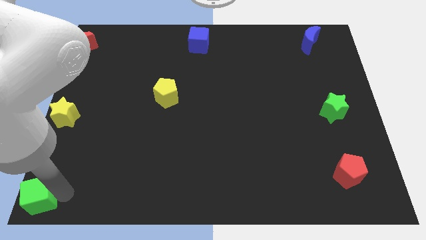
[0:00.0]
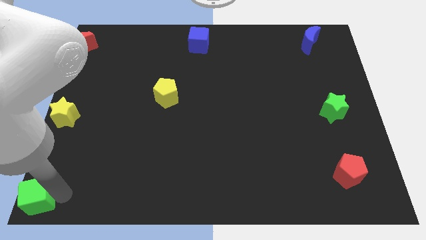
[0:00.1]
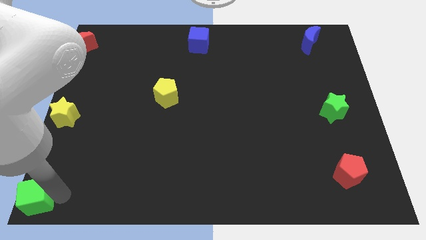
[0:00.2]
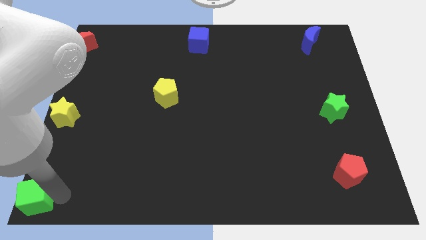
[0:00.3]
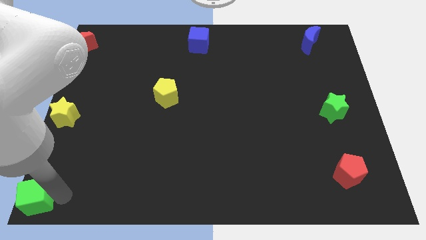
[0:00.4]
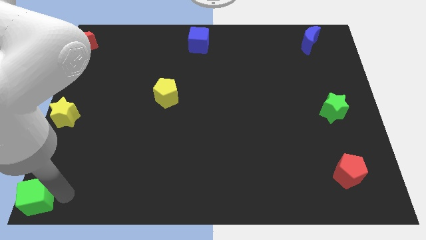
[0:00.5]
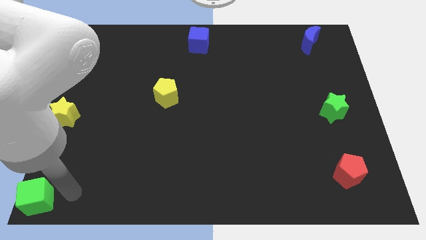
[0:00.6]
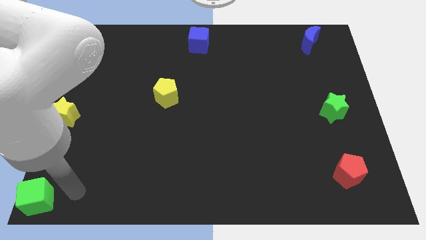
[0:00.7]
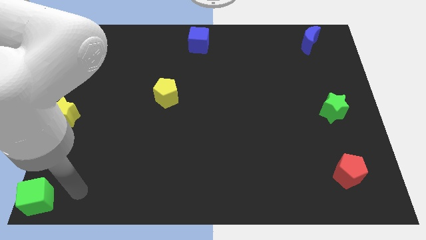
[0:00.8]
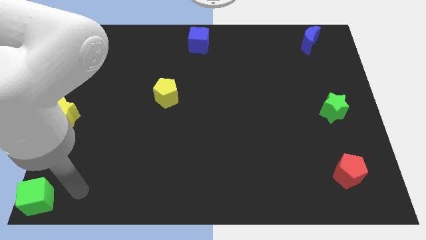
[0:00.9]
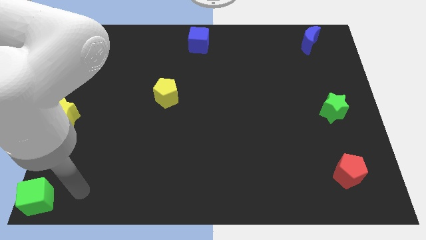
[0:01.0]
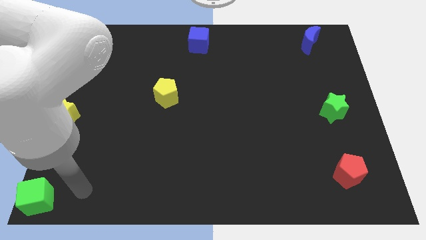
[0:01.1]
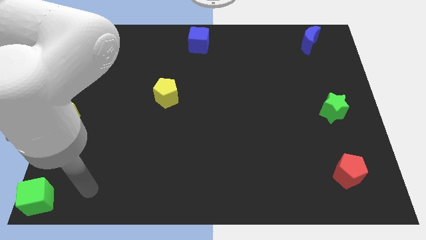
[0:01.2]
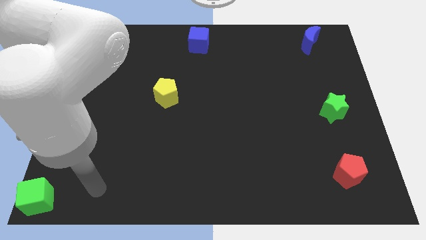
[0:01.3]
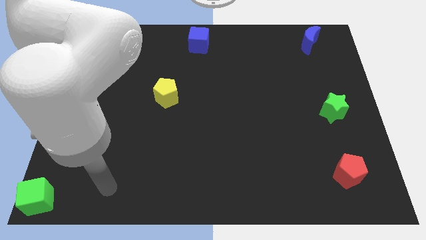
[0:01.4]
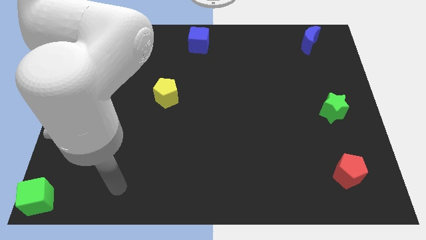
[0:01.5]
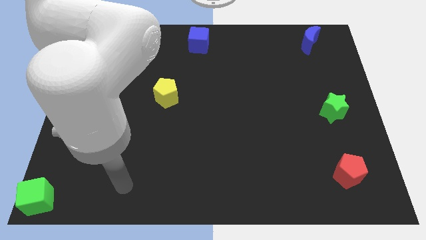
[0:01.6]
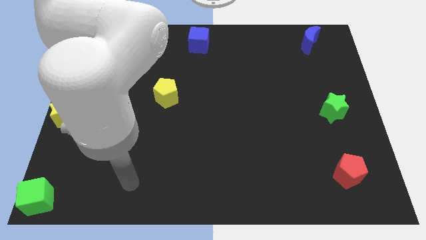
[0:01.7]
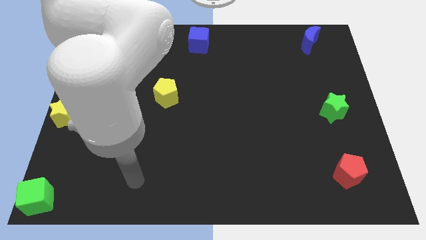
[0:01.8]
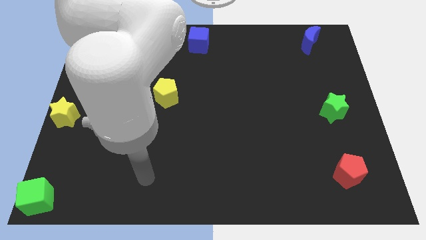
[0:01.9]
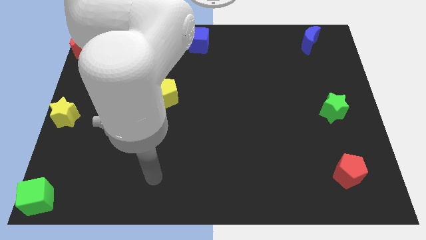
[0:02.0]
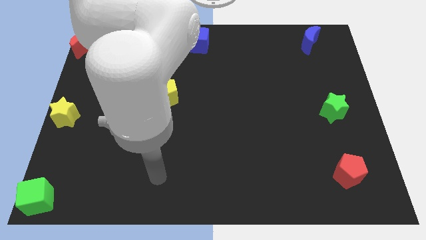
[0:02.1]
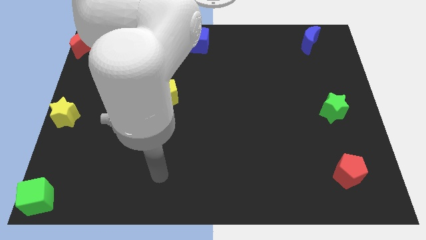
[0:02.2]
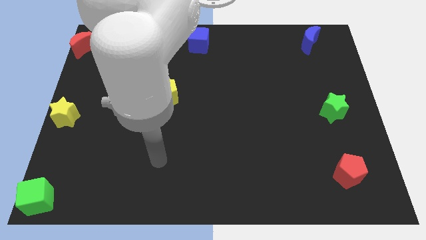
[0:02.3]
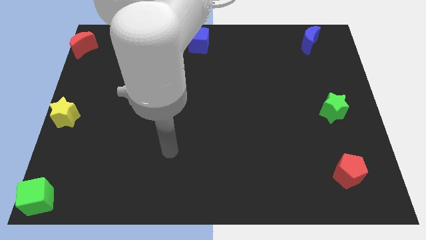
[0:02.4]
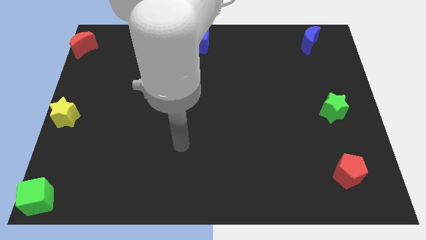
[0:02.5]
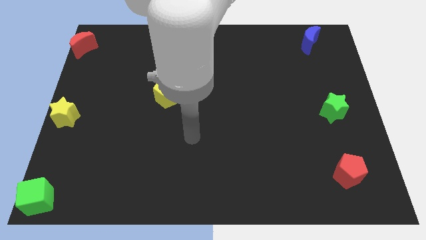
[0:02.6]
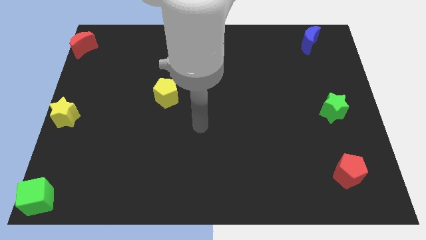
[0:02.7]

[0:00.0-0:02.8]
move the arm horizontally towards the center side

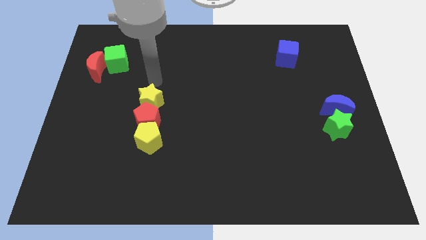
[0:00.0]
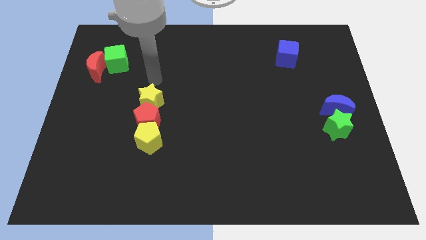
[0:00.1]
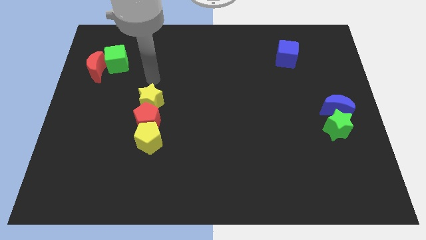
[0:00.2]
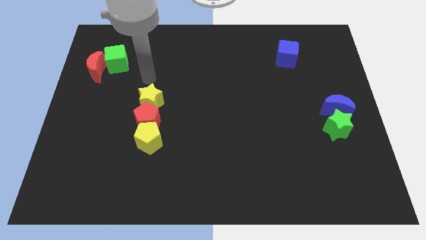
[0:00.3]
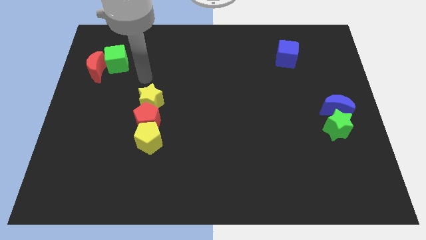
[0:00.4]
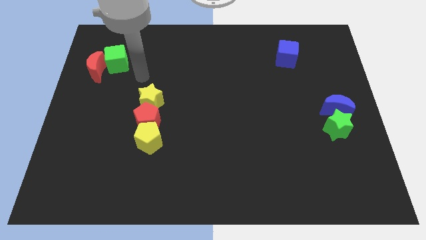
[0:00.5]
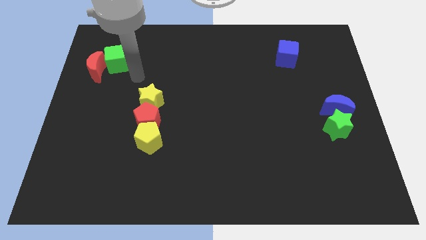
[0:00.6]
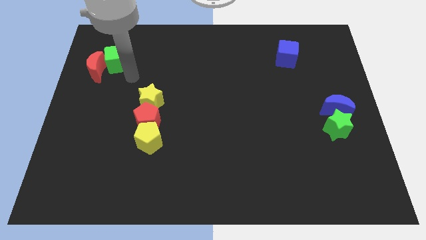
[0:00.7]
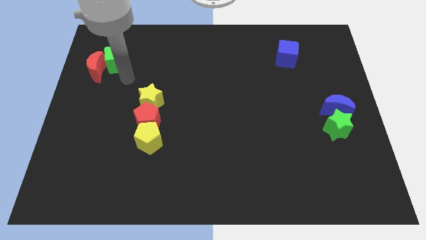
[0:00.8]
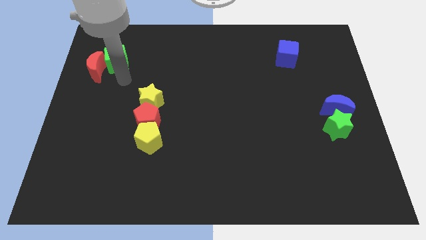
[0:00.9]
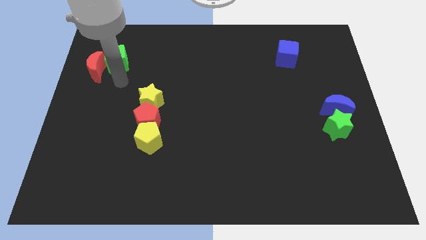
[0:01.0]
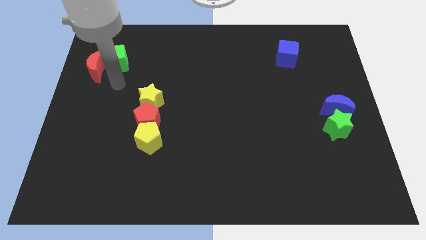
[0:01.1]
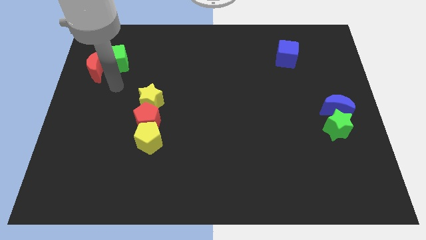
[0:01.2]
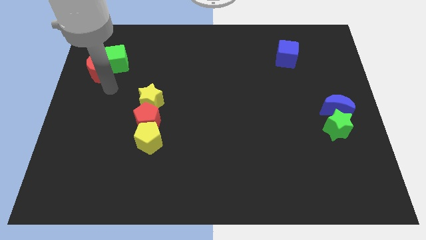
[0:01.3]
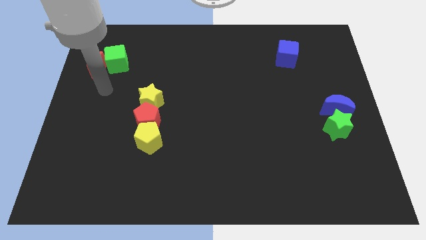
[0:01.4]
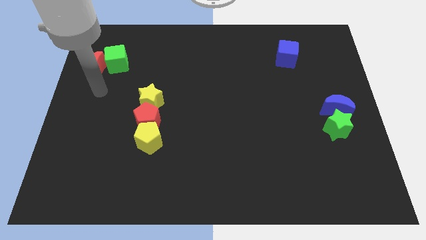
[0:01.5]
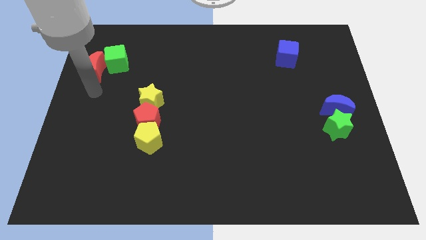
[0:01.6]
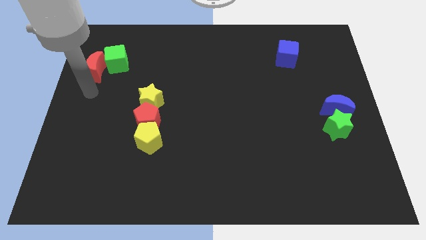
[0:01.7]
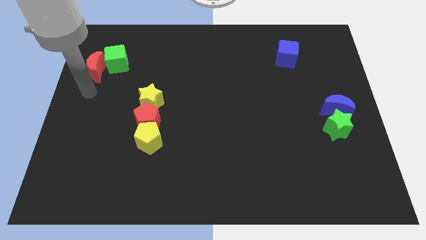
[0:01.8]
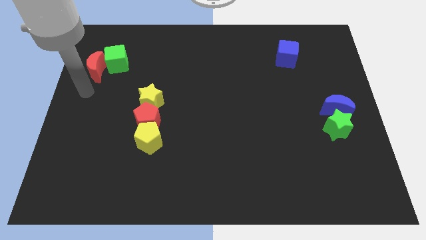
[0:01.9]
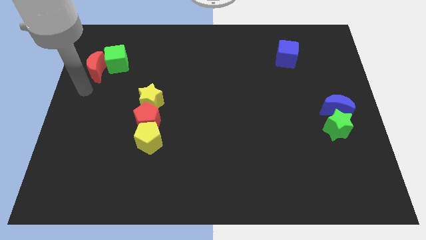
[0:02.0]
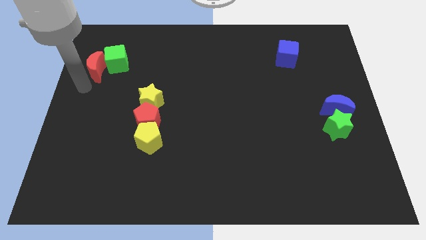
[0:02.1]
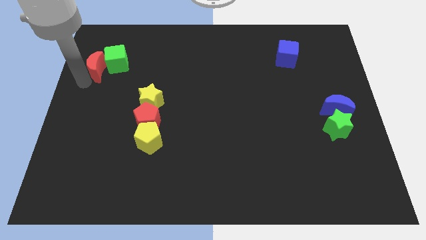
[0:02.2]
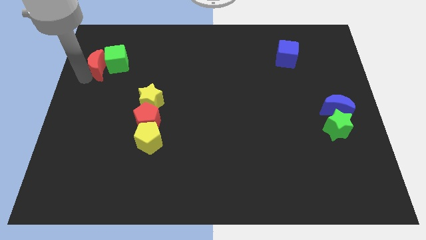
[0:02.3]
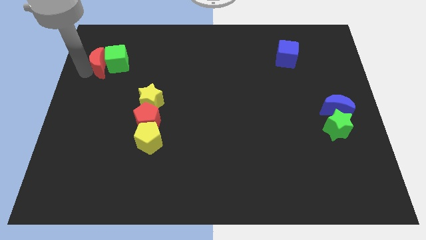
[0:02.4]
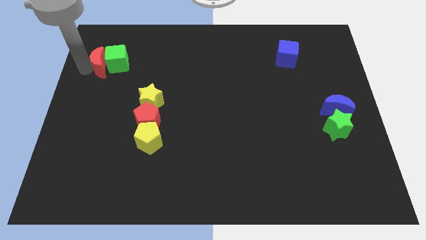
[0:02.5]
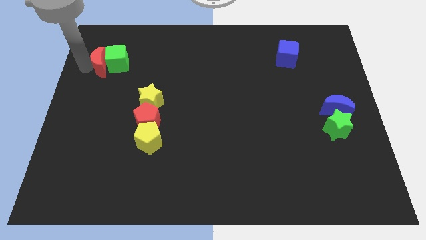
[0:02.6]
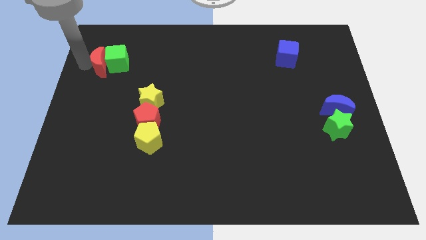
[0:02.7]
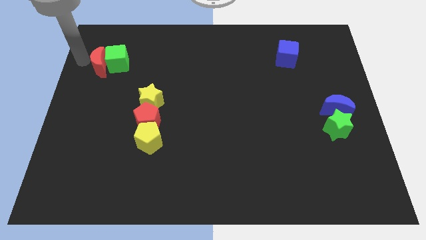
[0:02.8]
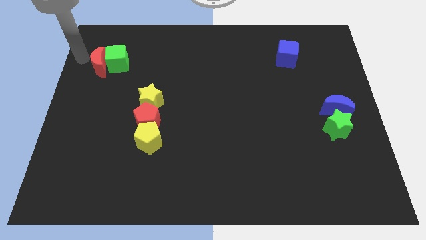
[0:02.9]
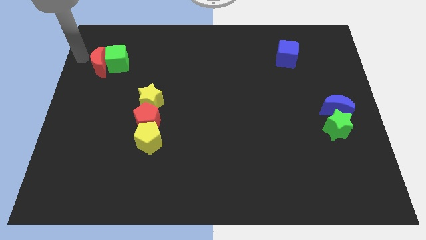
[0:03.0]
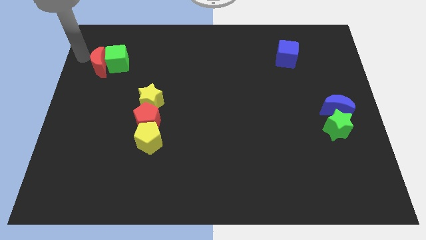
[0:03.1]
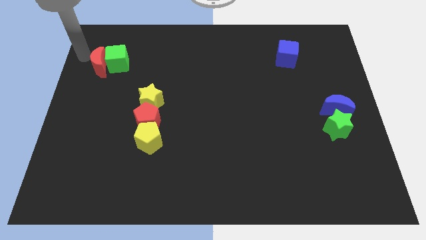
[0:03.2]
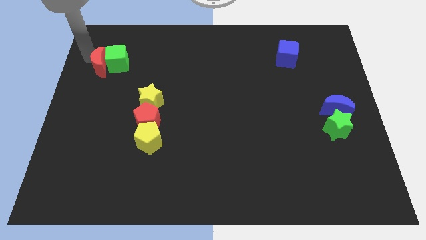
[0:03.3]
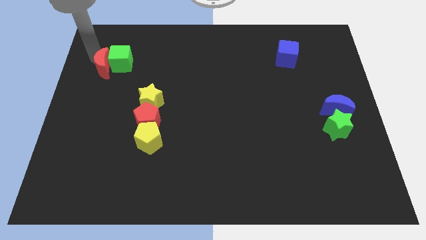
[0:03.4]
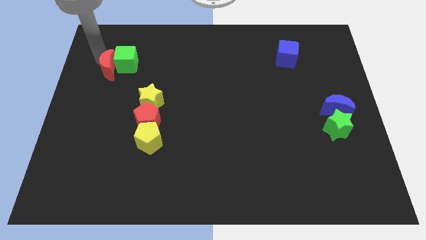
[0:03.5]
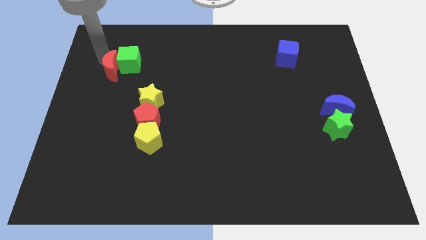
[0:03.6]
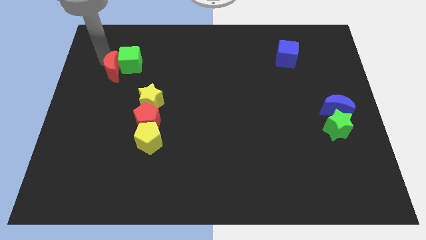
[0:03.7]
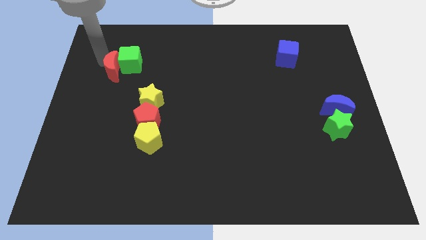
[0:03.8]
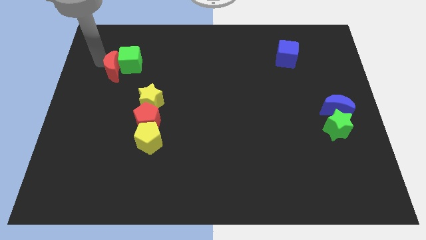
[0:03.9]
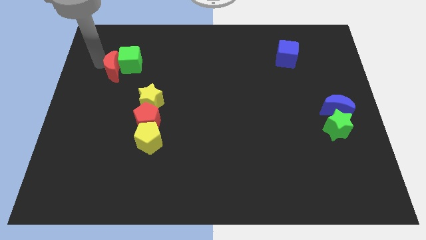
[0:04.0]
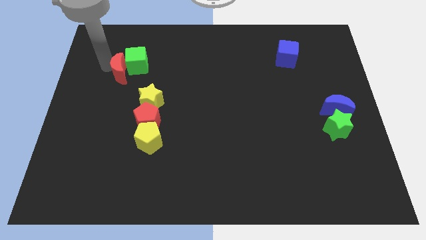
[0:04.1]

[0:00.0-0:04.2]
slightly push the red moon along with the green cube to the right side of the board

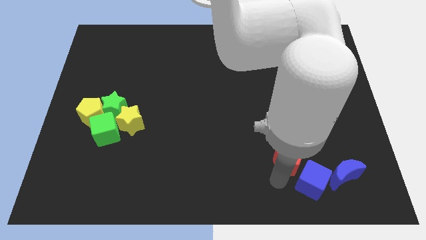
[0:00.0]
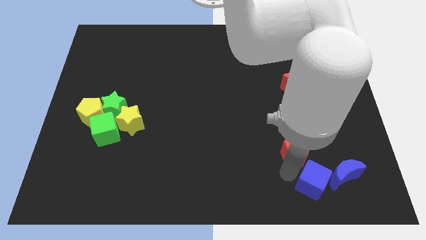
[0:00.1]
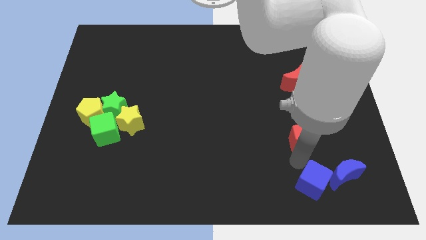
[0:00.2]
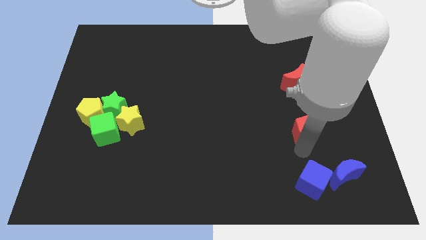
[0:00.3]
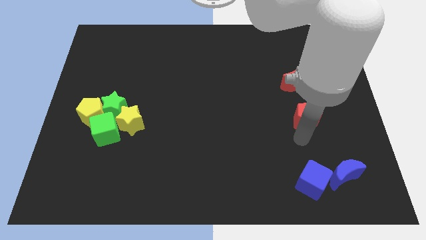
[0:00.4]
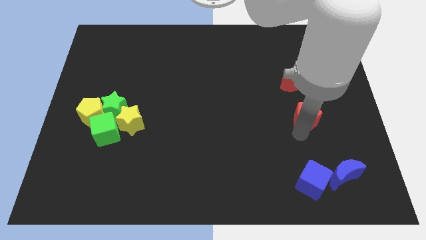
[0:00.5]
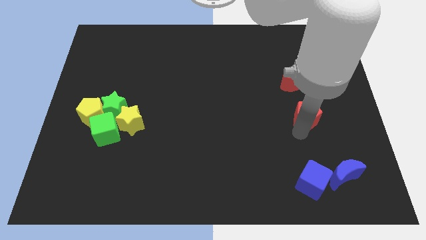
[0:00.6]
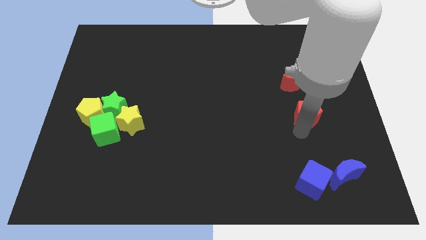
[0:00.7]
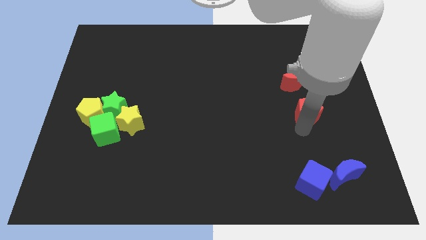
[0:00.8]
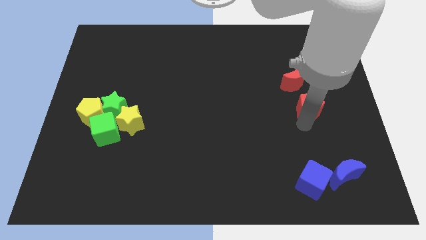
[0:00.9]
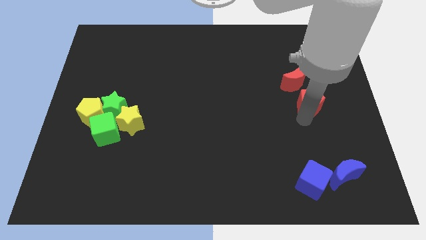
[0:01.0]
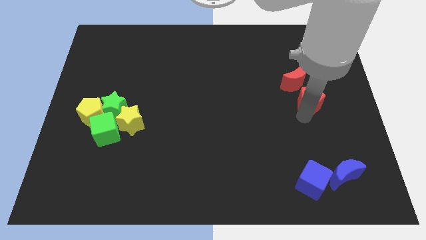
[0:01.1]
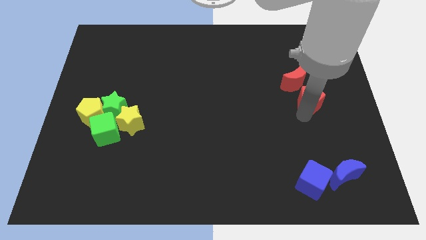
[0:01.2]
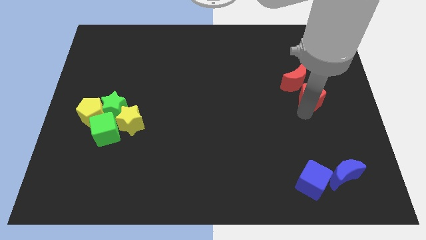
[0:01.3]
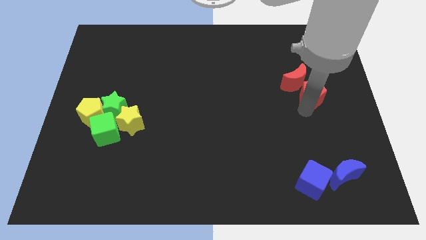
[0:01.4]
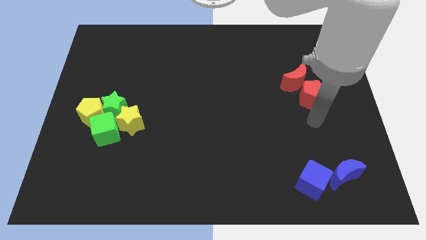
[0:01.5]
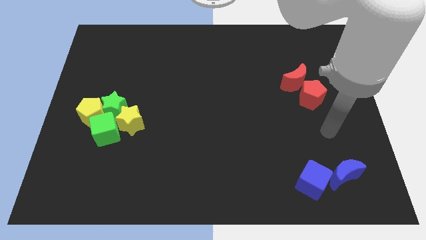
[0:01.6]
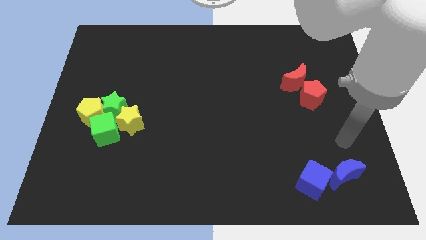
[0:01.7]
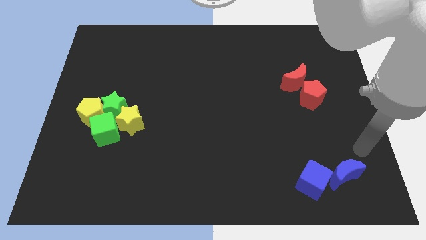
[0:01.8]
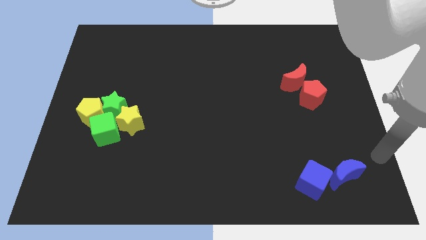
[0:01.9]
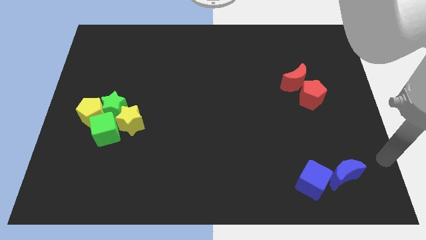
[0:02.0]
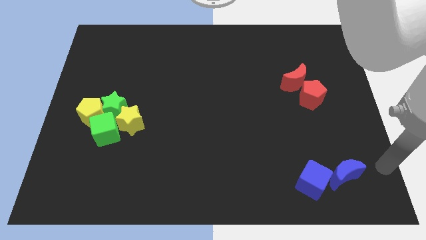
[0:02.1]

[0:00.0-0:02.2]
push the red pentagon towards top left side of the board
